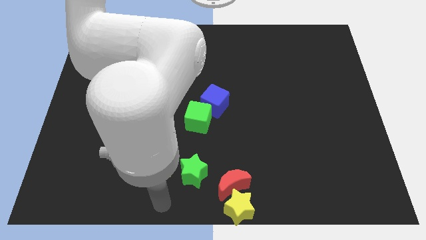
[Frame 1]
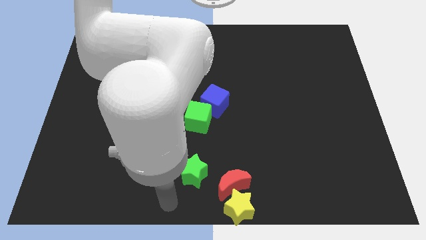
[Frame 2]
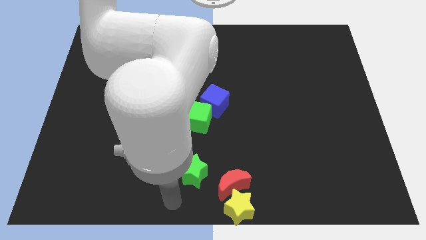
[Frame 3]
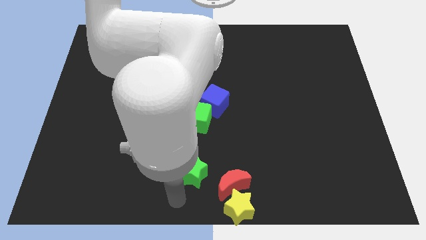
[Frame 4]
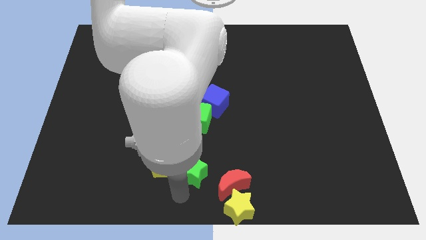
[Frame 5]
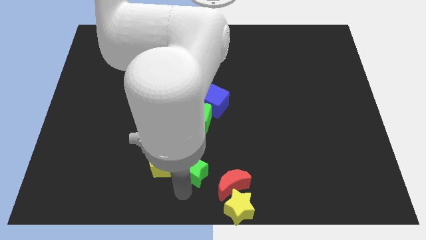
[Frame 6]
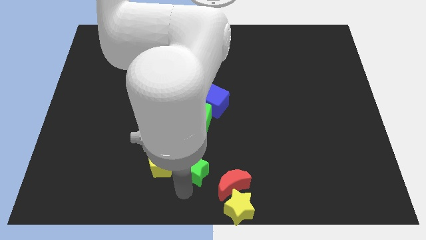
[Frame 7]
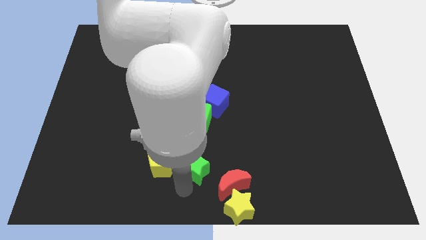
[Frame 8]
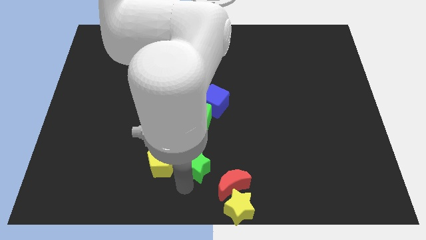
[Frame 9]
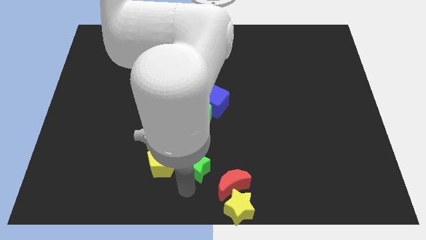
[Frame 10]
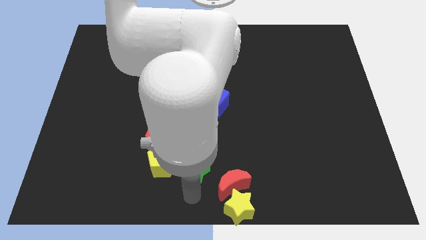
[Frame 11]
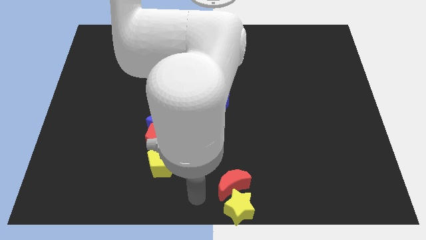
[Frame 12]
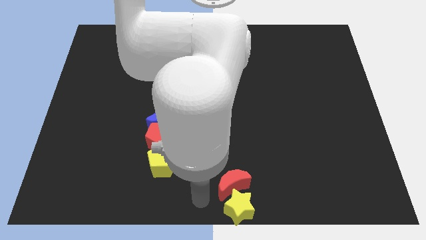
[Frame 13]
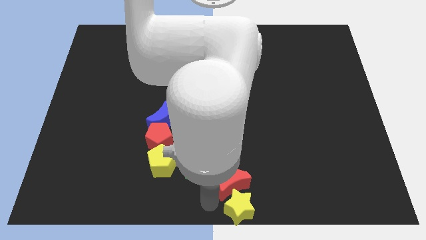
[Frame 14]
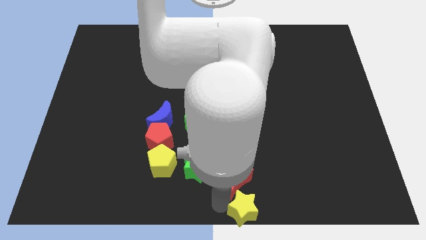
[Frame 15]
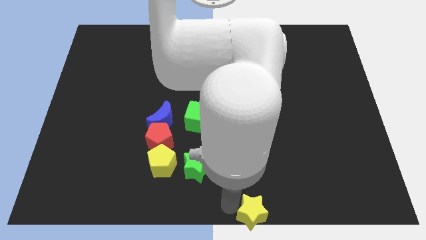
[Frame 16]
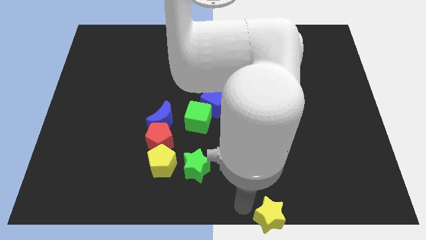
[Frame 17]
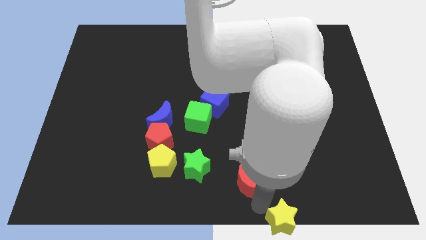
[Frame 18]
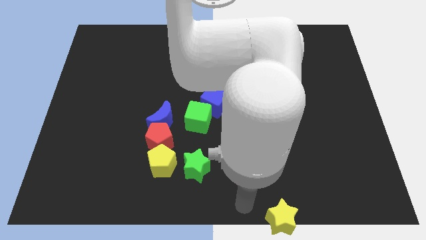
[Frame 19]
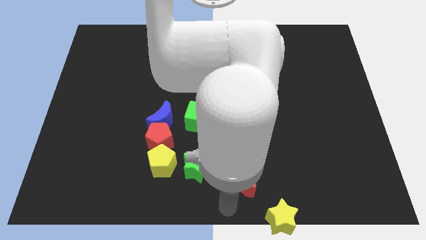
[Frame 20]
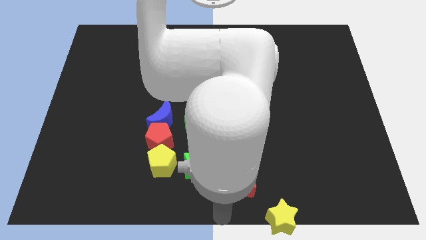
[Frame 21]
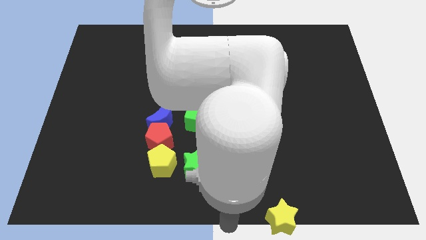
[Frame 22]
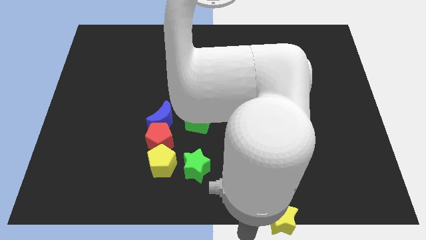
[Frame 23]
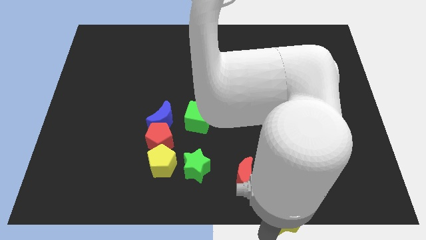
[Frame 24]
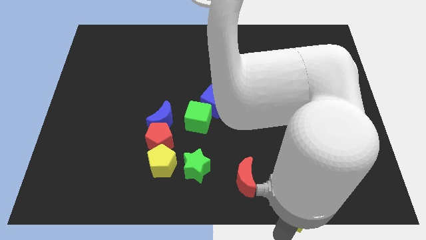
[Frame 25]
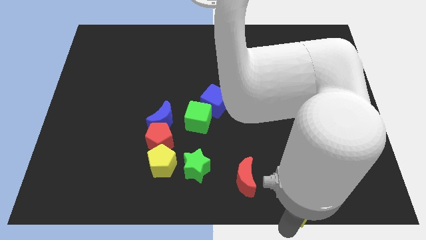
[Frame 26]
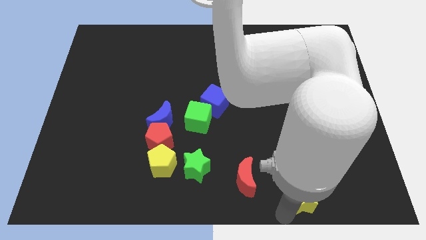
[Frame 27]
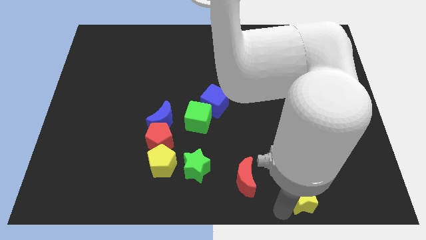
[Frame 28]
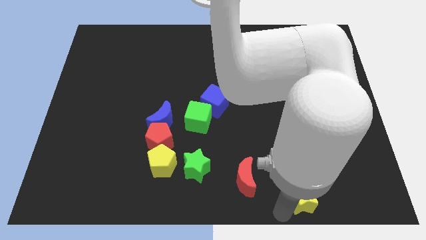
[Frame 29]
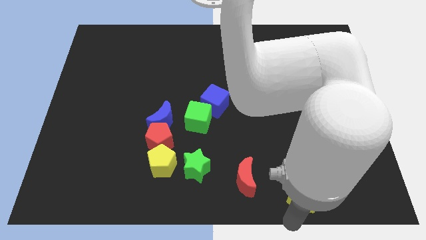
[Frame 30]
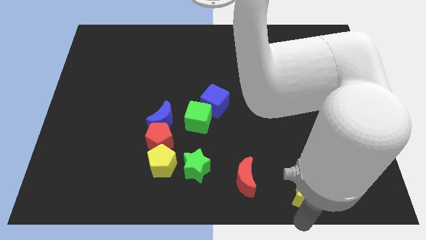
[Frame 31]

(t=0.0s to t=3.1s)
separate yellow star from red moon

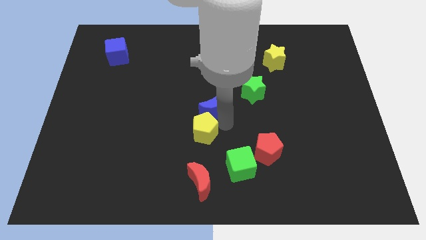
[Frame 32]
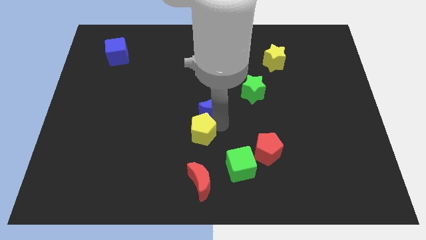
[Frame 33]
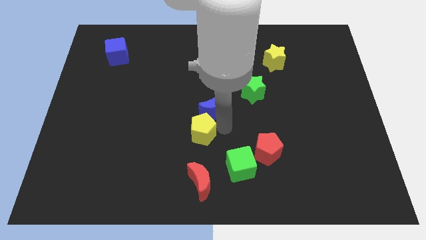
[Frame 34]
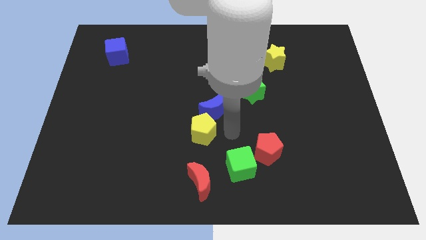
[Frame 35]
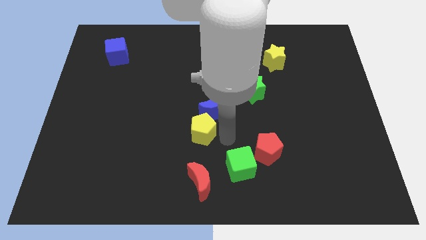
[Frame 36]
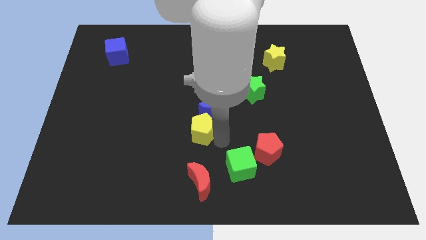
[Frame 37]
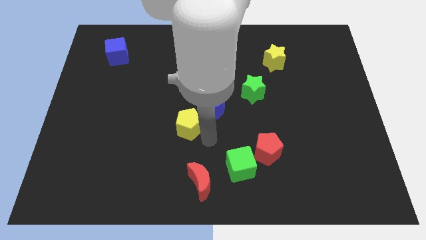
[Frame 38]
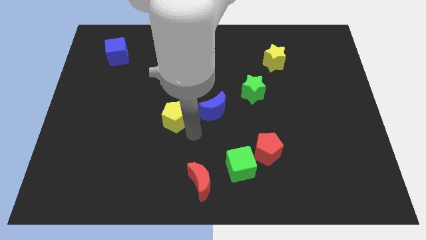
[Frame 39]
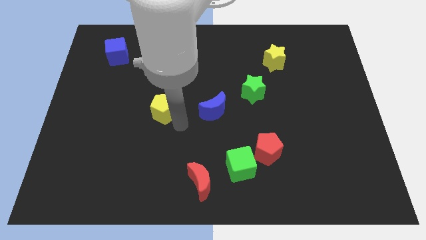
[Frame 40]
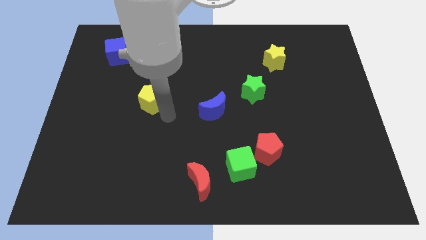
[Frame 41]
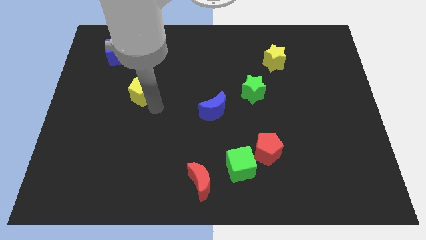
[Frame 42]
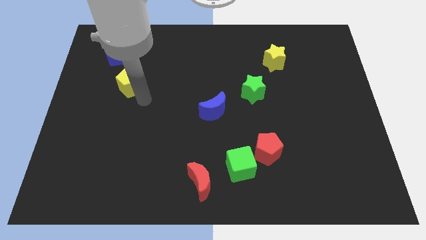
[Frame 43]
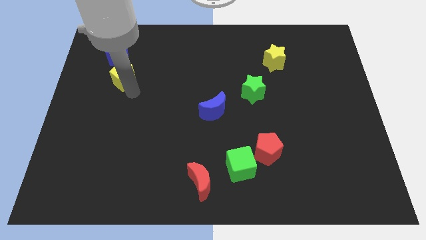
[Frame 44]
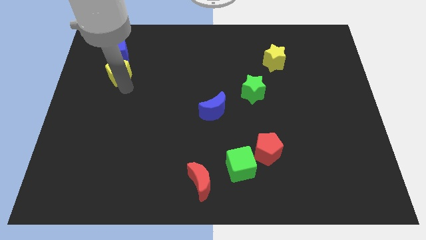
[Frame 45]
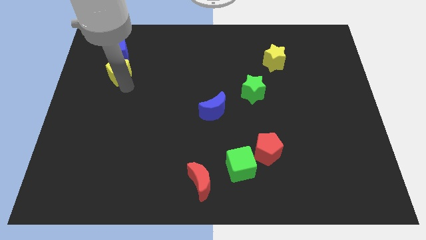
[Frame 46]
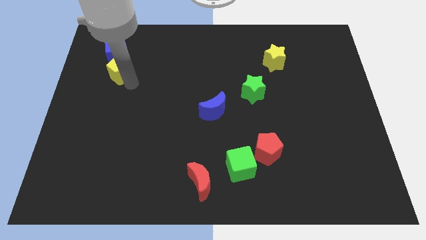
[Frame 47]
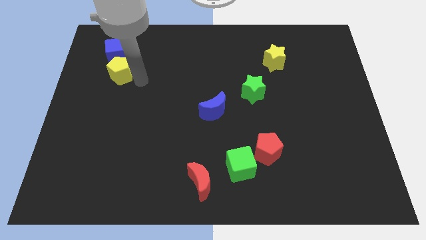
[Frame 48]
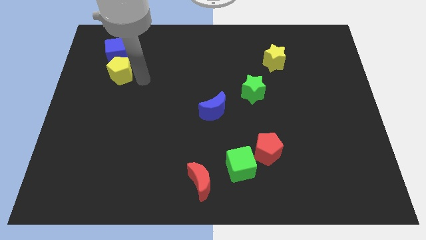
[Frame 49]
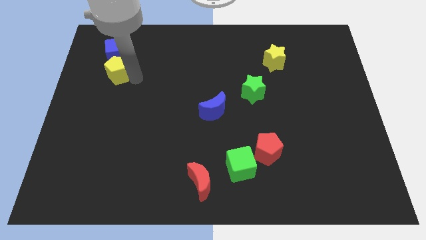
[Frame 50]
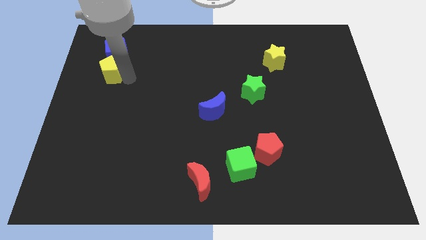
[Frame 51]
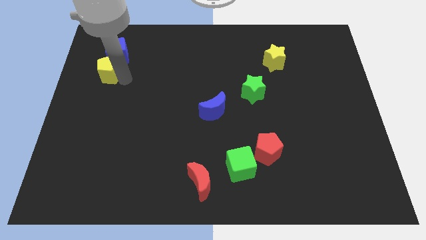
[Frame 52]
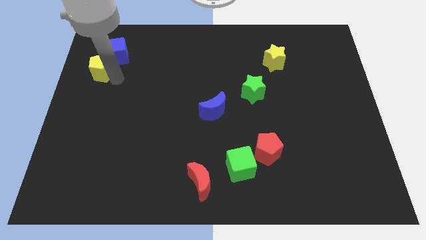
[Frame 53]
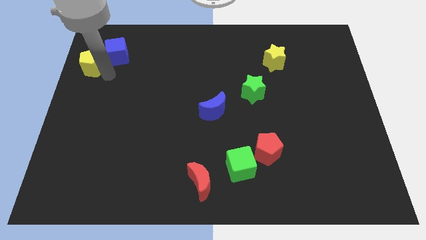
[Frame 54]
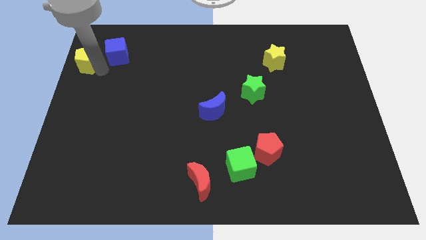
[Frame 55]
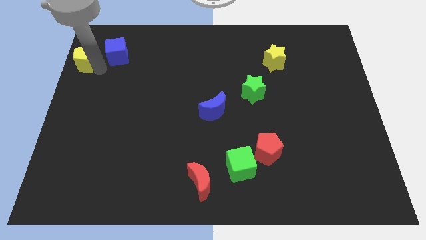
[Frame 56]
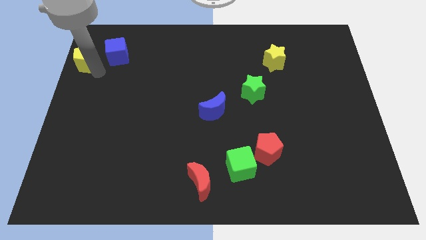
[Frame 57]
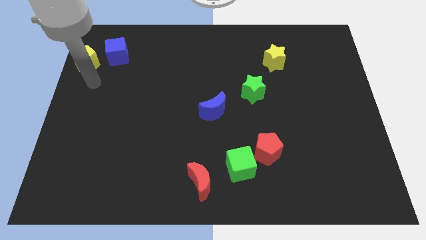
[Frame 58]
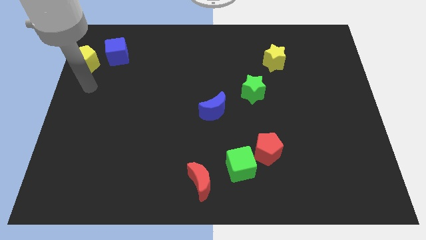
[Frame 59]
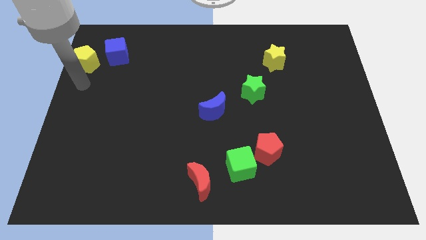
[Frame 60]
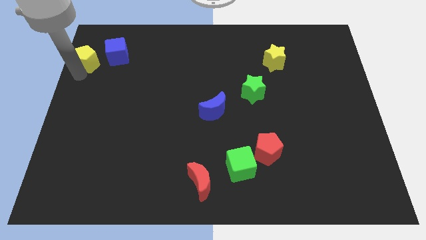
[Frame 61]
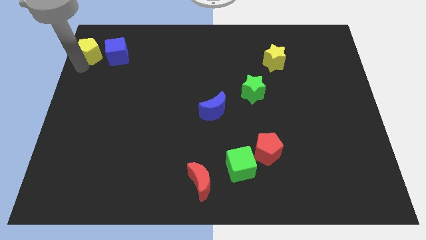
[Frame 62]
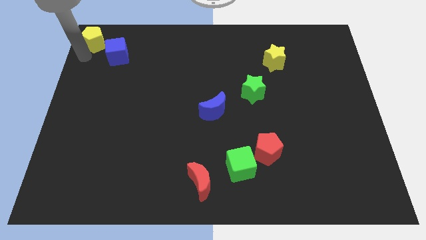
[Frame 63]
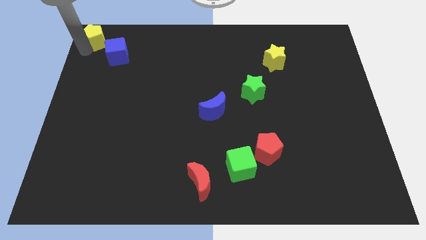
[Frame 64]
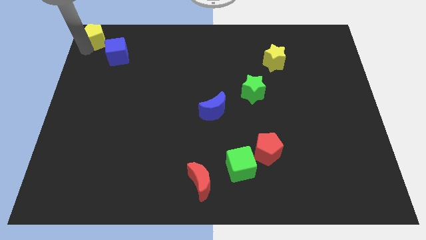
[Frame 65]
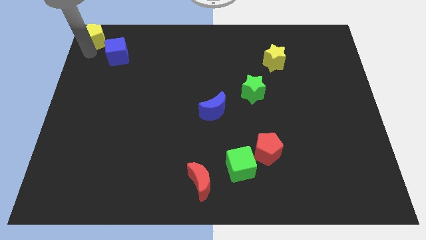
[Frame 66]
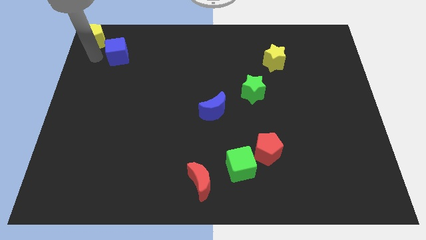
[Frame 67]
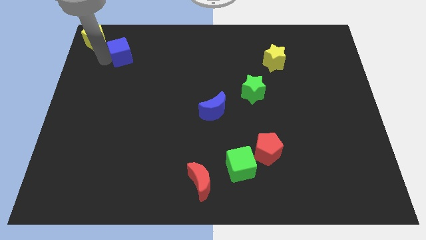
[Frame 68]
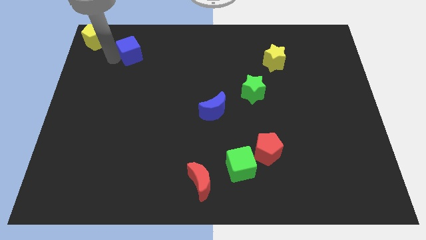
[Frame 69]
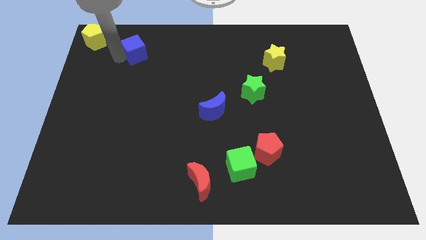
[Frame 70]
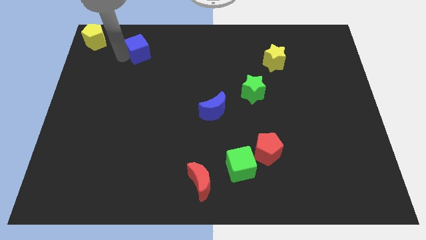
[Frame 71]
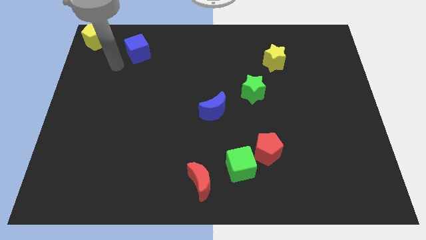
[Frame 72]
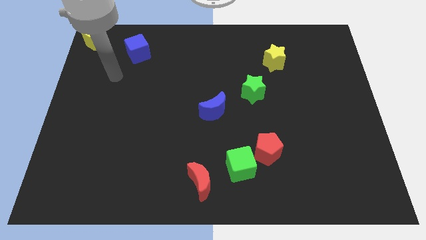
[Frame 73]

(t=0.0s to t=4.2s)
place the yellow pentagon to the top left side of the board

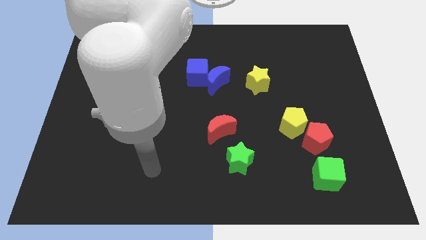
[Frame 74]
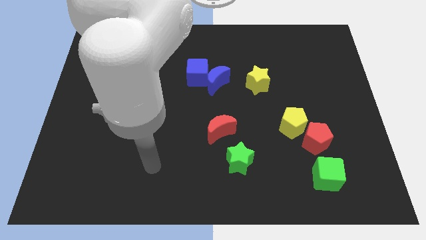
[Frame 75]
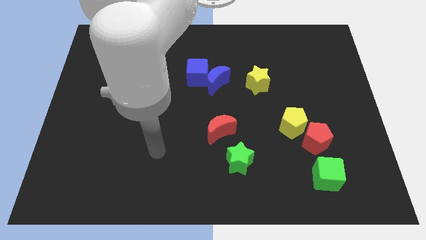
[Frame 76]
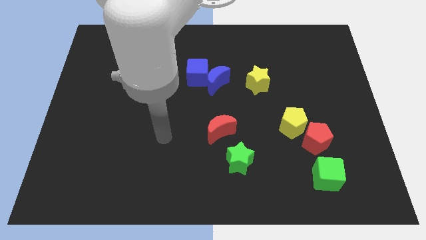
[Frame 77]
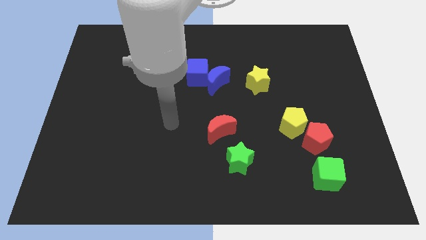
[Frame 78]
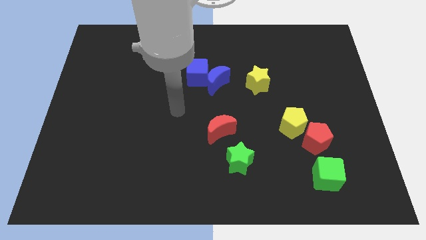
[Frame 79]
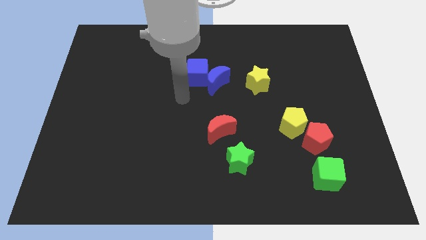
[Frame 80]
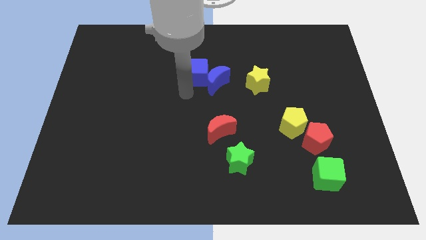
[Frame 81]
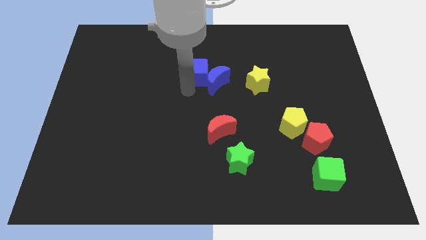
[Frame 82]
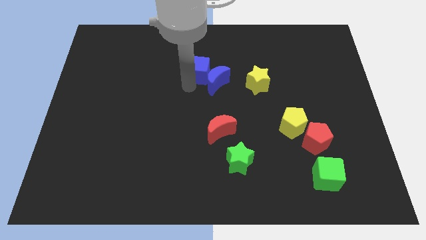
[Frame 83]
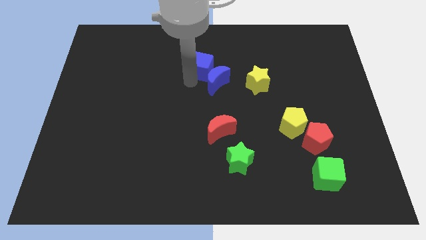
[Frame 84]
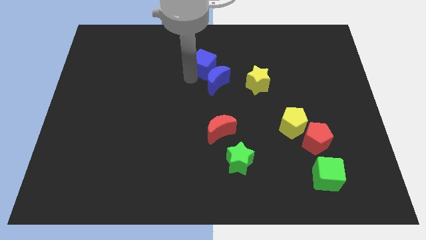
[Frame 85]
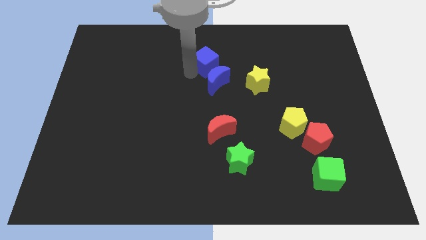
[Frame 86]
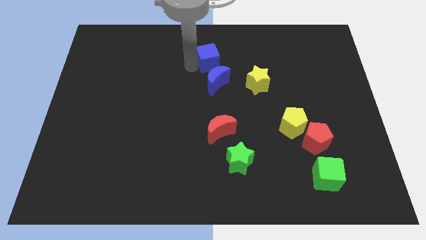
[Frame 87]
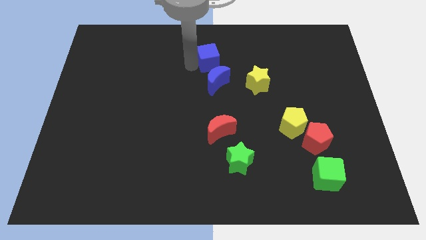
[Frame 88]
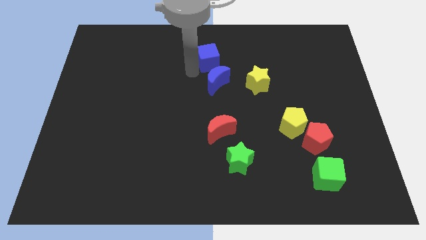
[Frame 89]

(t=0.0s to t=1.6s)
push the blue cube to the top of the blue crescent
